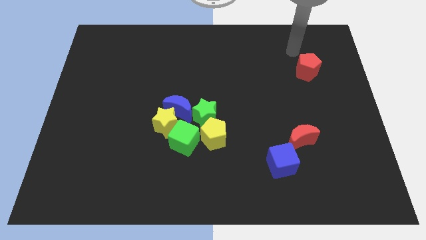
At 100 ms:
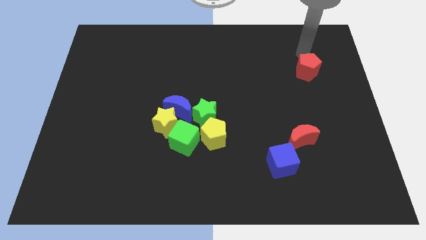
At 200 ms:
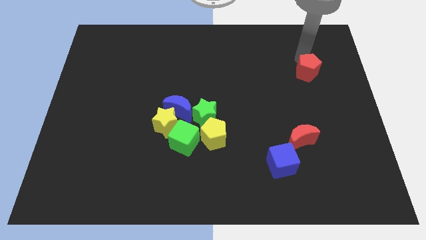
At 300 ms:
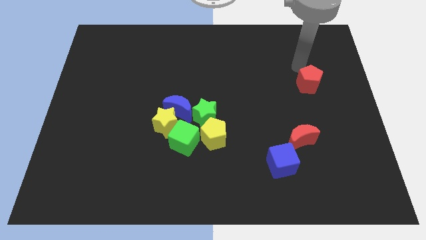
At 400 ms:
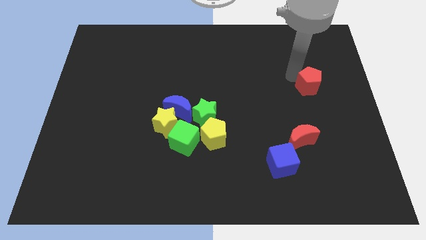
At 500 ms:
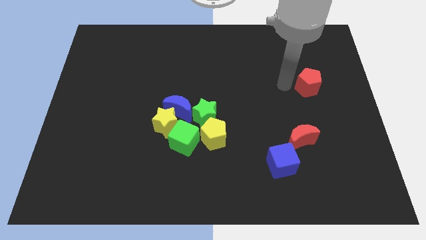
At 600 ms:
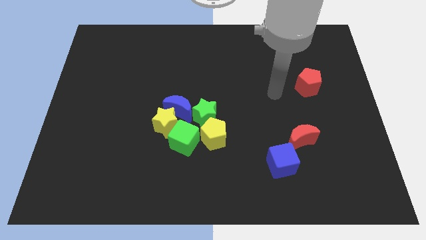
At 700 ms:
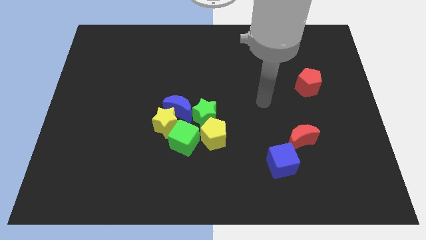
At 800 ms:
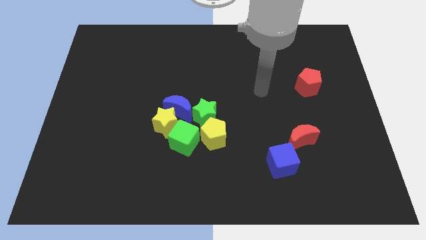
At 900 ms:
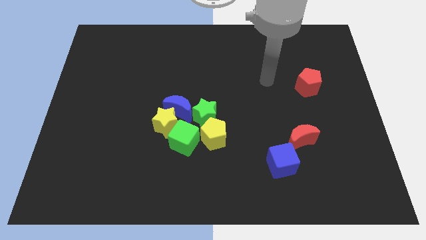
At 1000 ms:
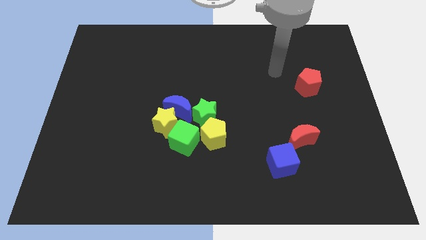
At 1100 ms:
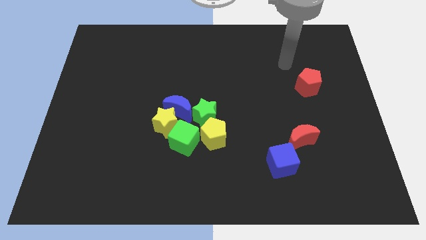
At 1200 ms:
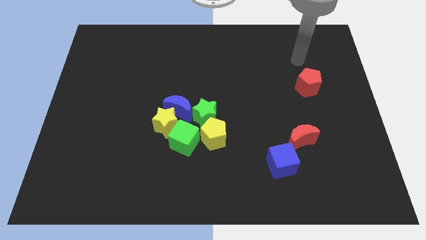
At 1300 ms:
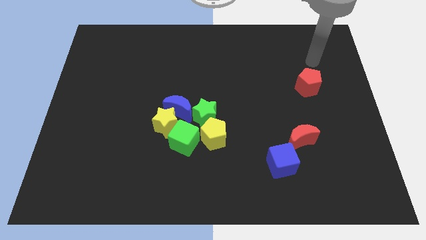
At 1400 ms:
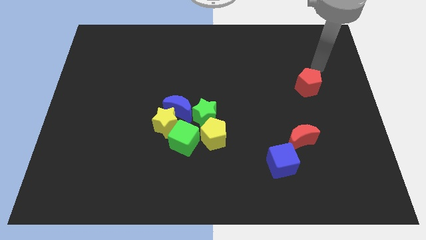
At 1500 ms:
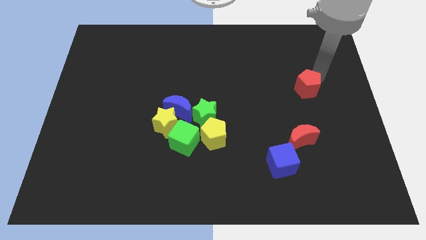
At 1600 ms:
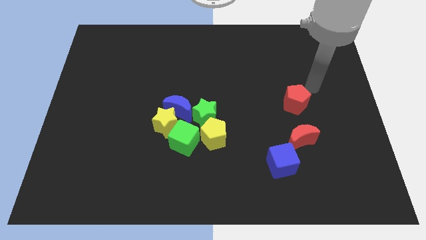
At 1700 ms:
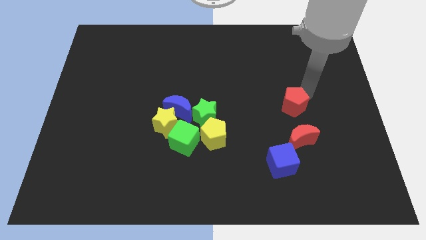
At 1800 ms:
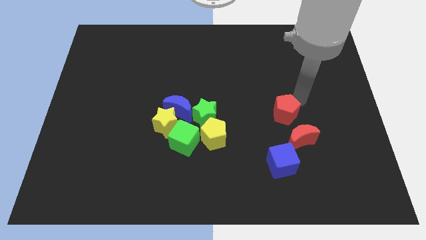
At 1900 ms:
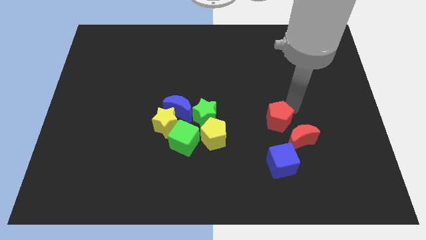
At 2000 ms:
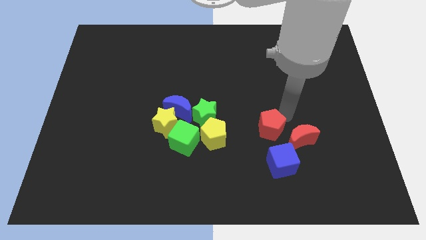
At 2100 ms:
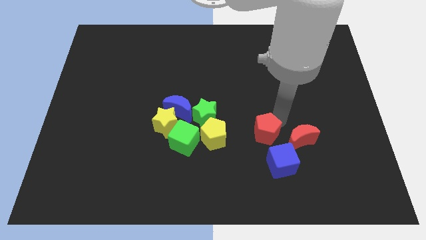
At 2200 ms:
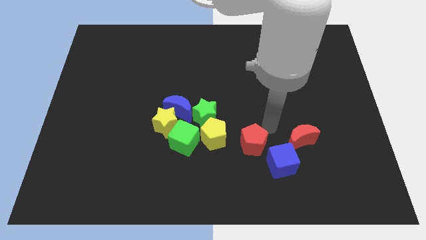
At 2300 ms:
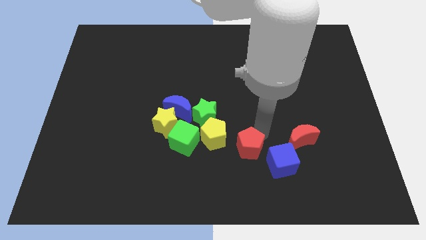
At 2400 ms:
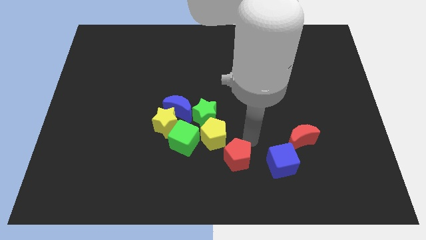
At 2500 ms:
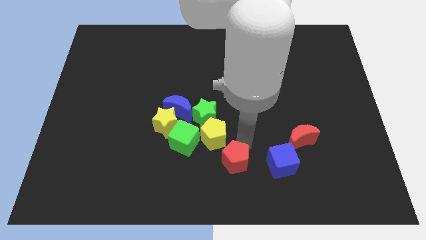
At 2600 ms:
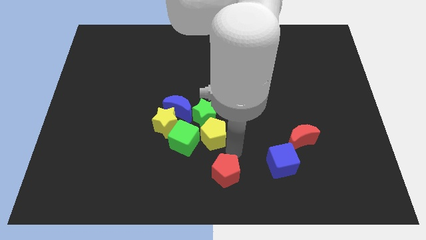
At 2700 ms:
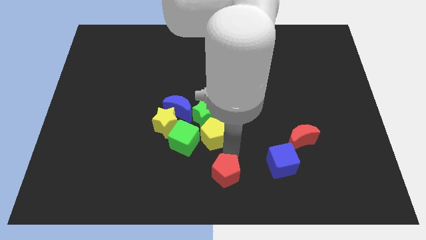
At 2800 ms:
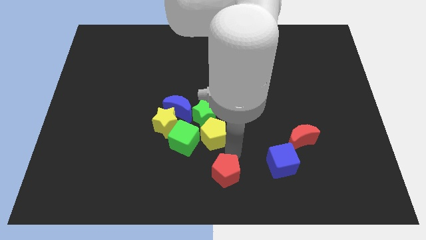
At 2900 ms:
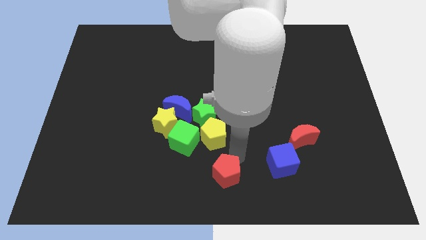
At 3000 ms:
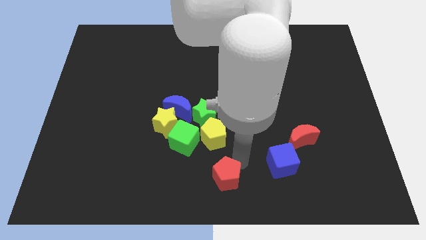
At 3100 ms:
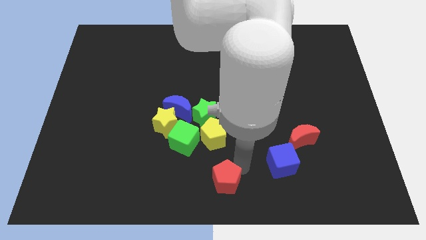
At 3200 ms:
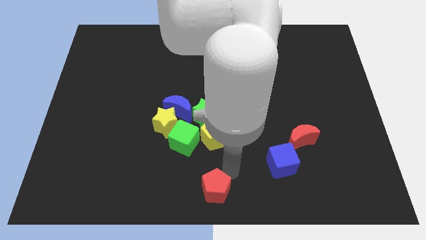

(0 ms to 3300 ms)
push the red pentagon below the yellow pentagon

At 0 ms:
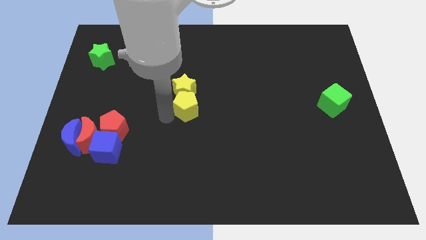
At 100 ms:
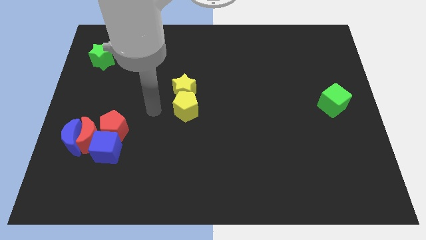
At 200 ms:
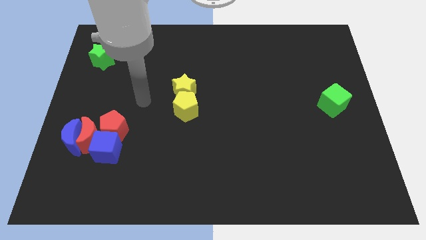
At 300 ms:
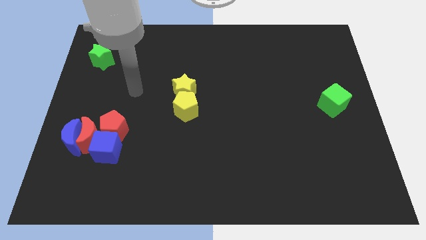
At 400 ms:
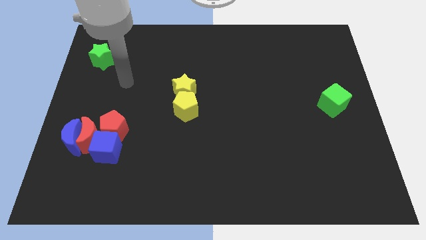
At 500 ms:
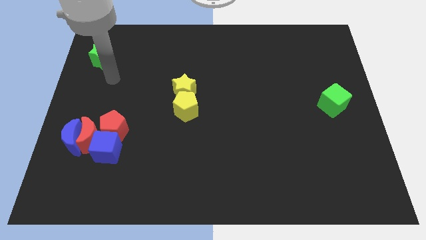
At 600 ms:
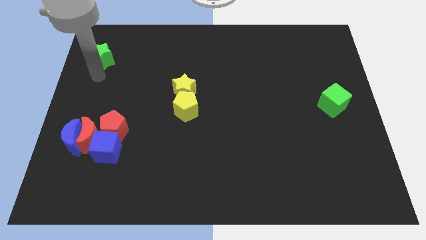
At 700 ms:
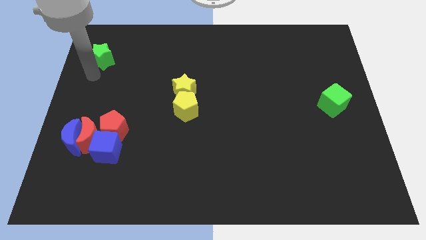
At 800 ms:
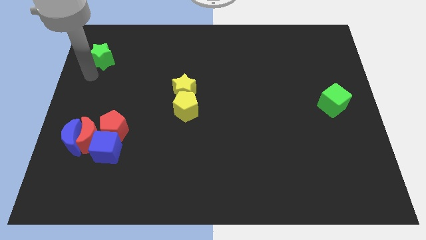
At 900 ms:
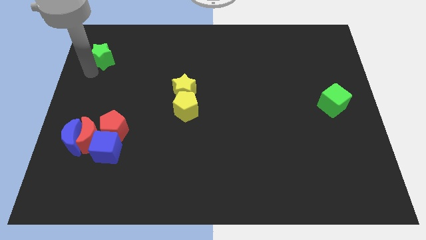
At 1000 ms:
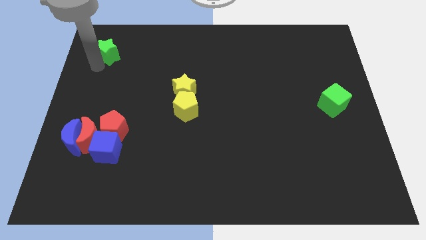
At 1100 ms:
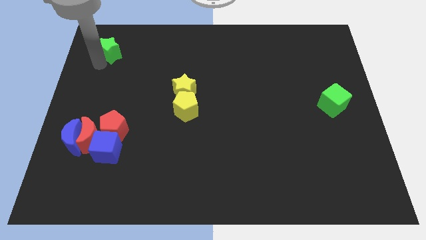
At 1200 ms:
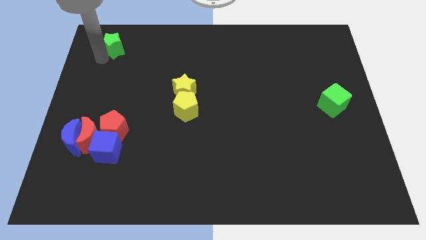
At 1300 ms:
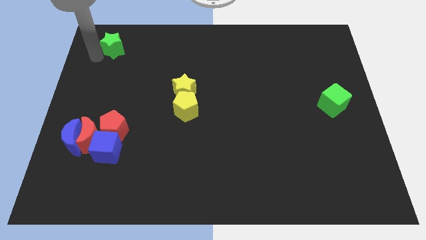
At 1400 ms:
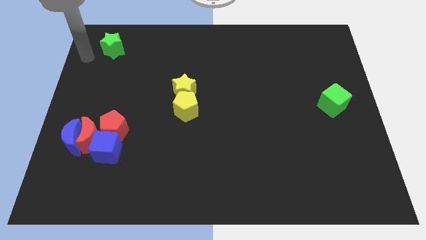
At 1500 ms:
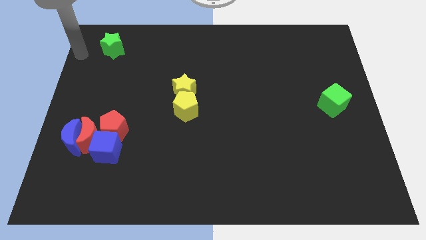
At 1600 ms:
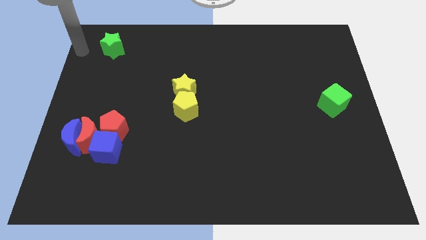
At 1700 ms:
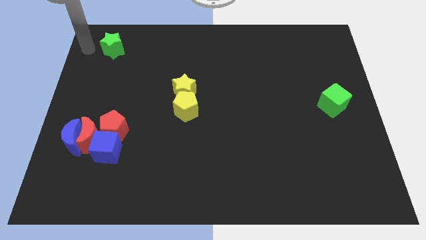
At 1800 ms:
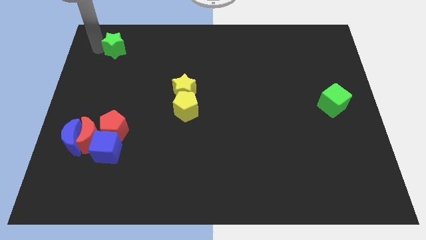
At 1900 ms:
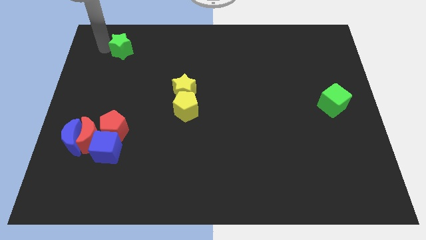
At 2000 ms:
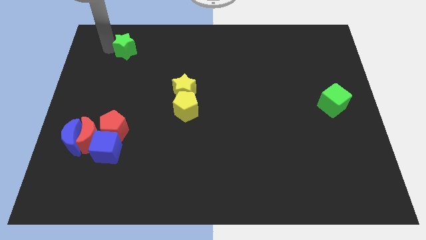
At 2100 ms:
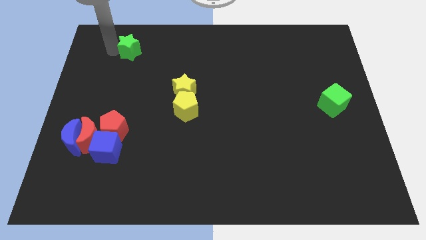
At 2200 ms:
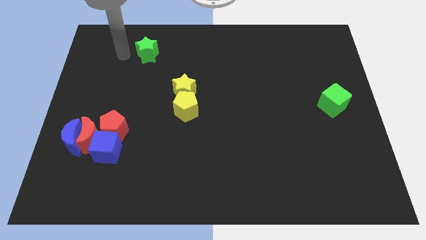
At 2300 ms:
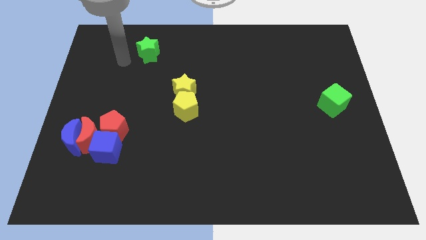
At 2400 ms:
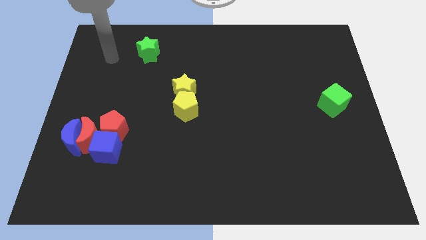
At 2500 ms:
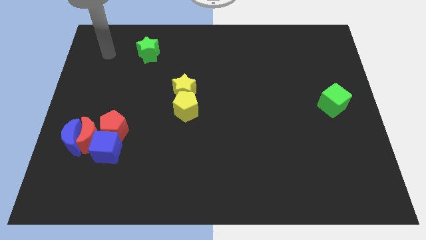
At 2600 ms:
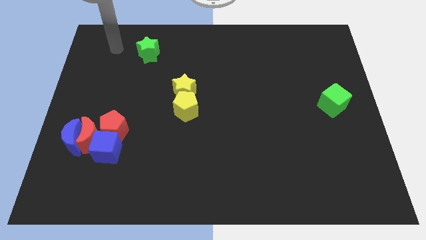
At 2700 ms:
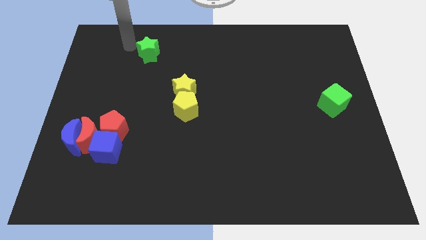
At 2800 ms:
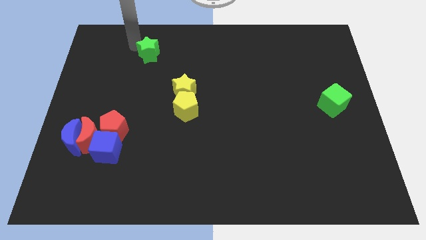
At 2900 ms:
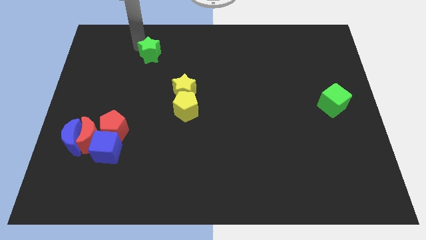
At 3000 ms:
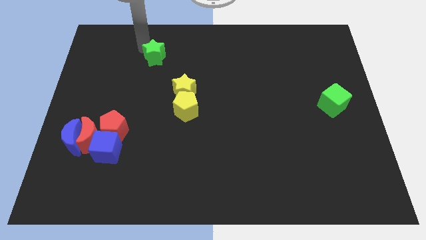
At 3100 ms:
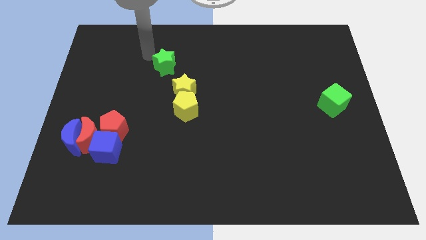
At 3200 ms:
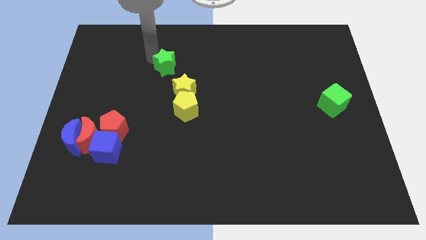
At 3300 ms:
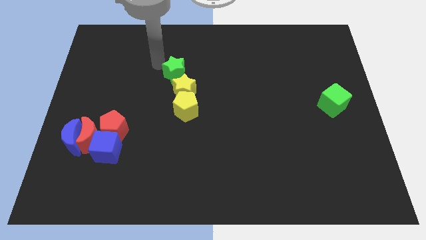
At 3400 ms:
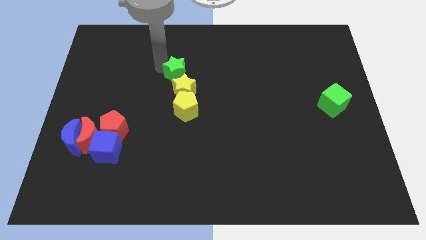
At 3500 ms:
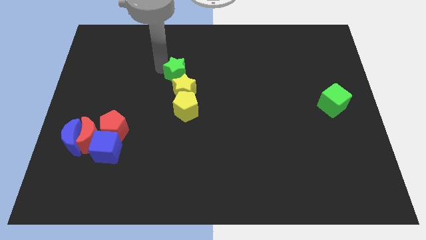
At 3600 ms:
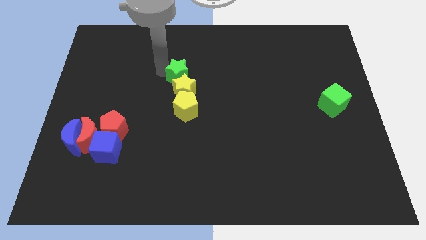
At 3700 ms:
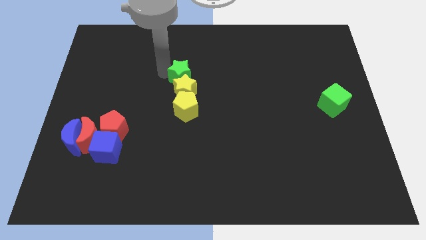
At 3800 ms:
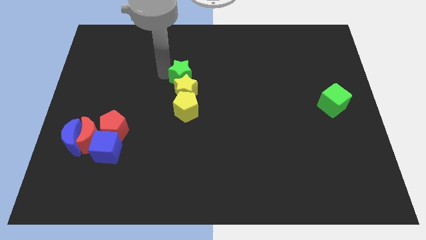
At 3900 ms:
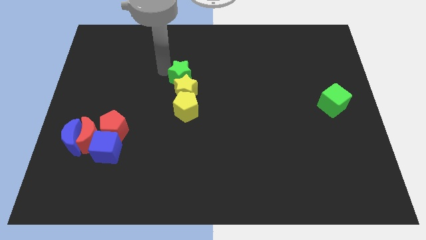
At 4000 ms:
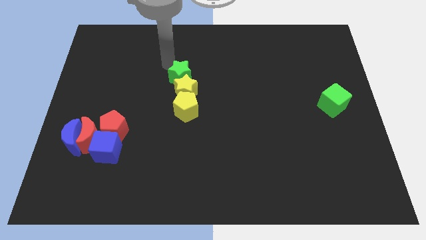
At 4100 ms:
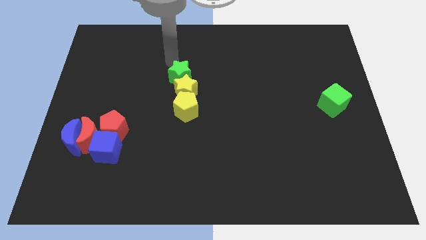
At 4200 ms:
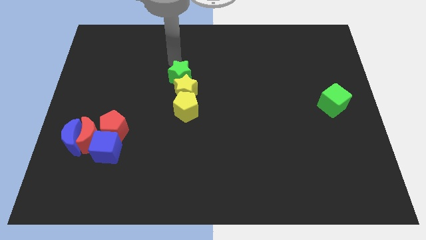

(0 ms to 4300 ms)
push the green star into the yellow star

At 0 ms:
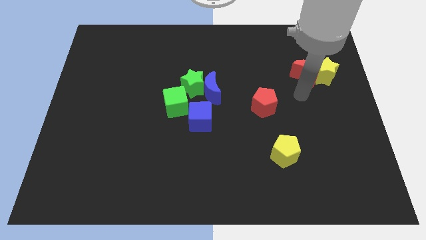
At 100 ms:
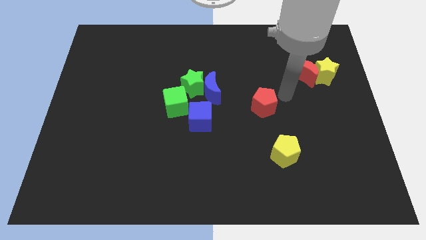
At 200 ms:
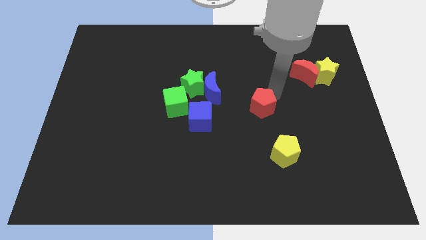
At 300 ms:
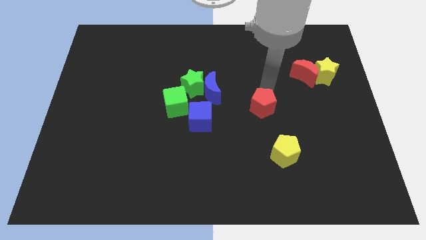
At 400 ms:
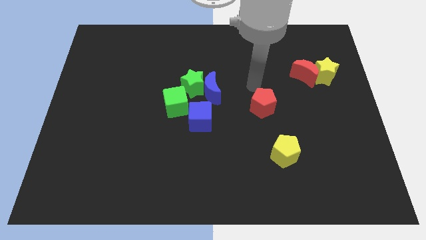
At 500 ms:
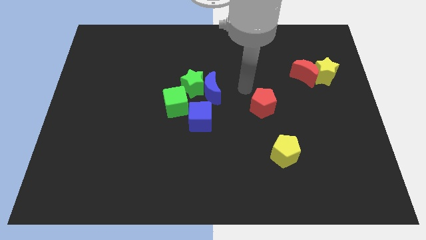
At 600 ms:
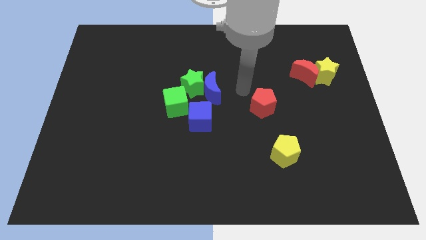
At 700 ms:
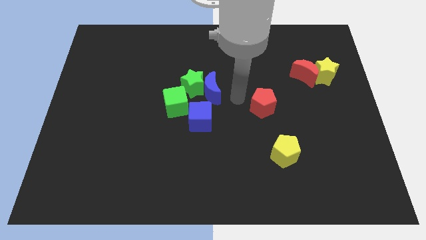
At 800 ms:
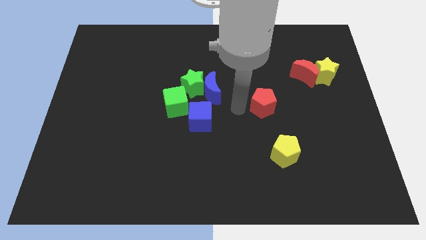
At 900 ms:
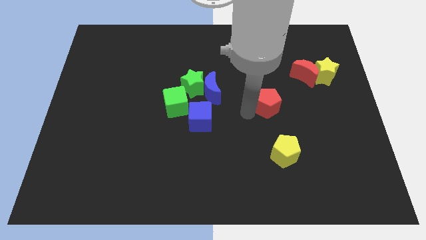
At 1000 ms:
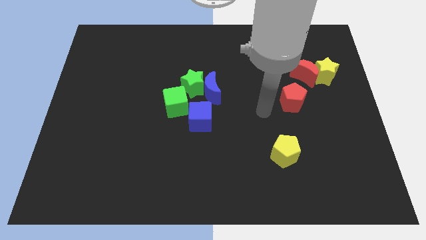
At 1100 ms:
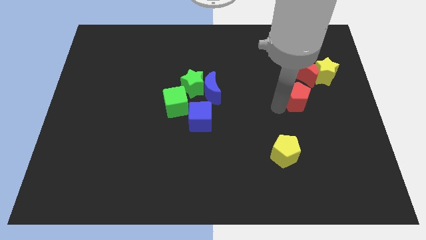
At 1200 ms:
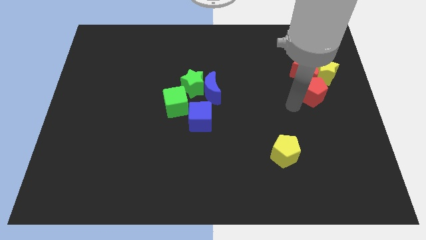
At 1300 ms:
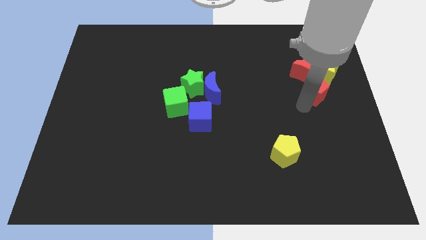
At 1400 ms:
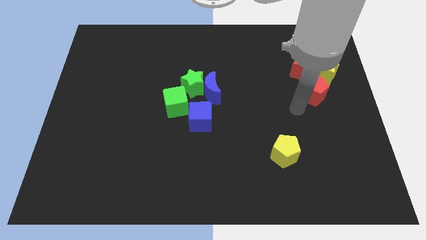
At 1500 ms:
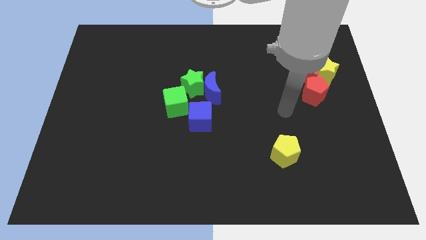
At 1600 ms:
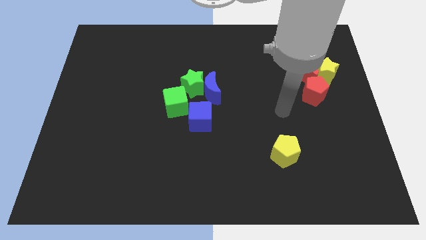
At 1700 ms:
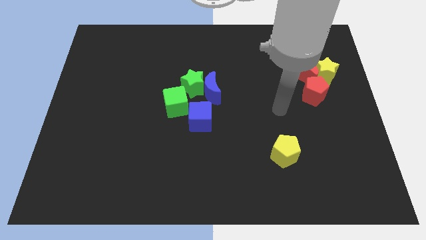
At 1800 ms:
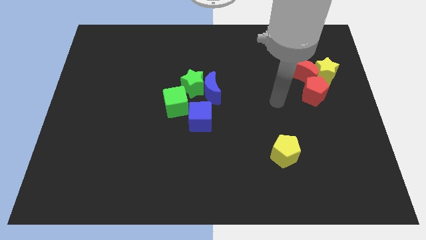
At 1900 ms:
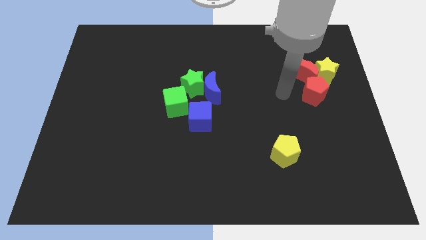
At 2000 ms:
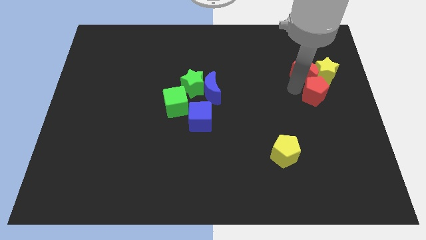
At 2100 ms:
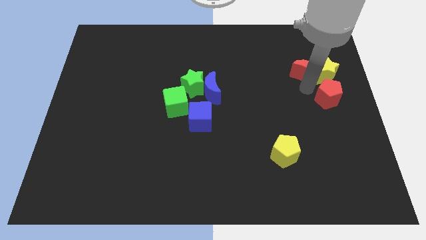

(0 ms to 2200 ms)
place the red crescent under the yellow star
